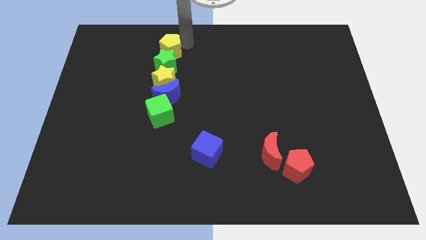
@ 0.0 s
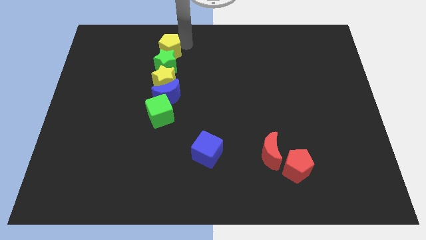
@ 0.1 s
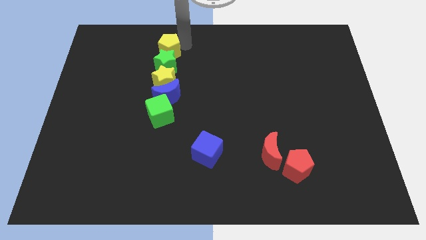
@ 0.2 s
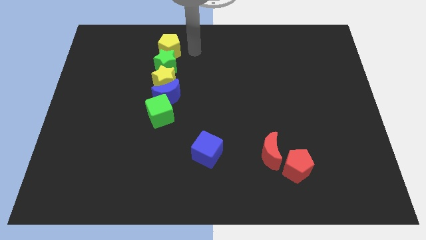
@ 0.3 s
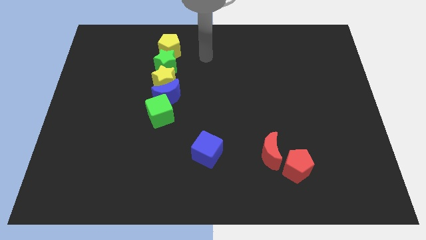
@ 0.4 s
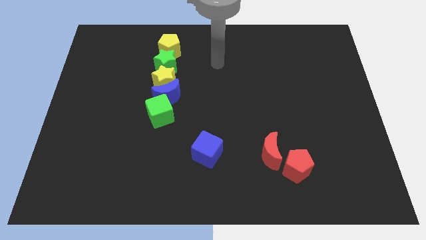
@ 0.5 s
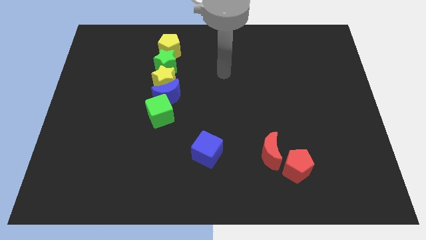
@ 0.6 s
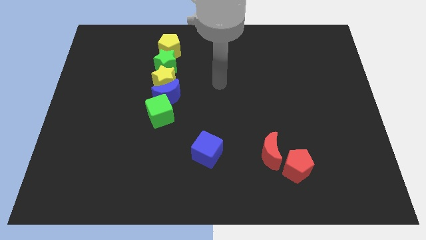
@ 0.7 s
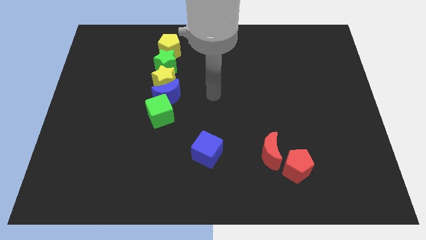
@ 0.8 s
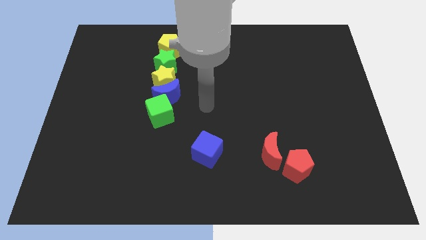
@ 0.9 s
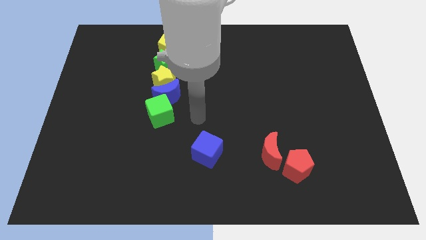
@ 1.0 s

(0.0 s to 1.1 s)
move your arm away from yellow pentagon

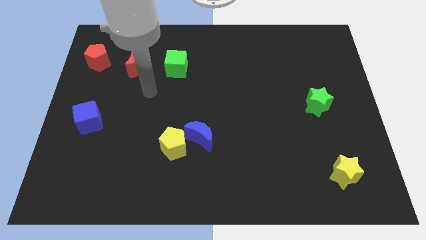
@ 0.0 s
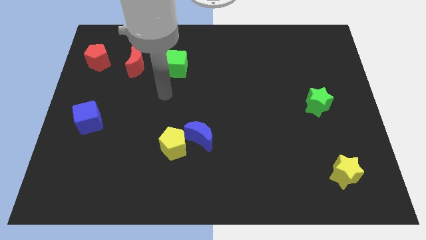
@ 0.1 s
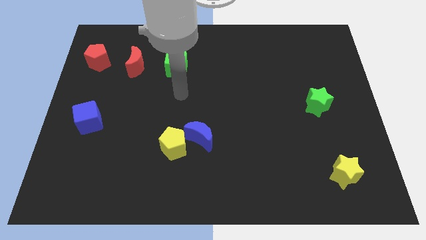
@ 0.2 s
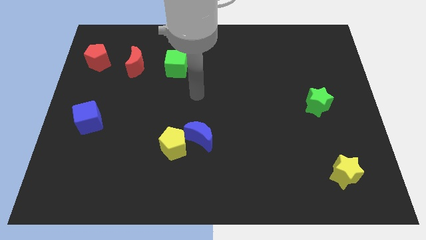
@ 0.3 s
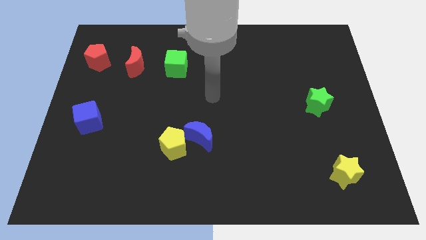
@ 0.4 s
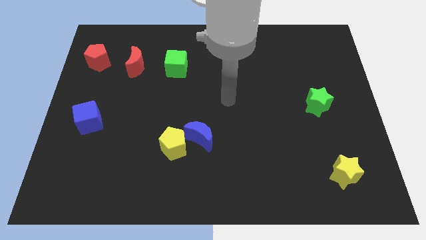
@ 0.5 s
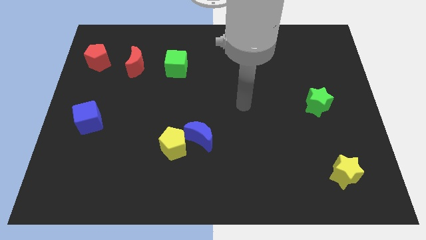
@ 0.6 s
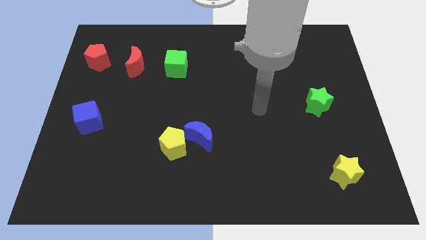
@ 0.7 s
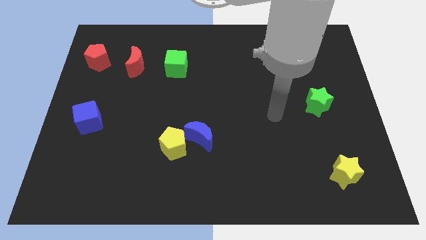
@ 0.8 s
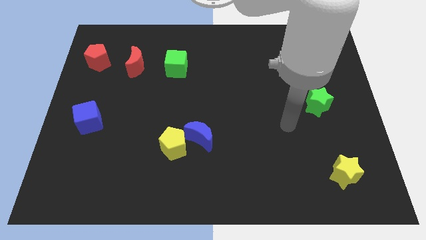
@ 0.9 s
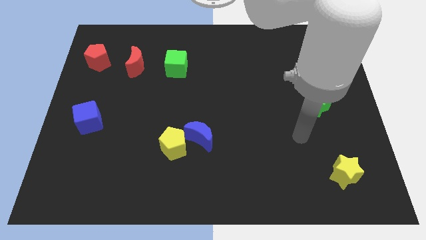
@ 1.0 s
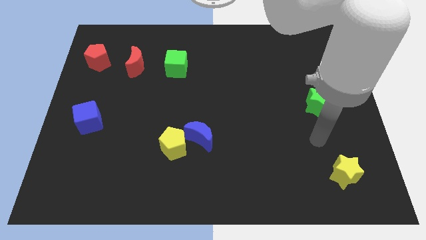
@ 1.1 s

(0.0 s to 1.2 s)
move the arm away from the red crescent

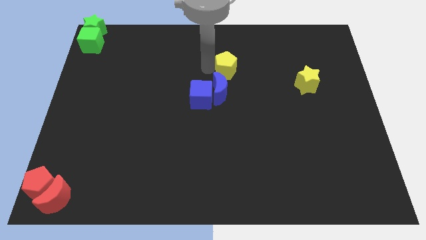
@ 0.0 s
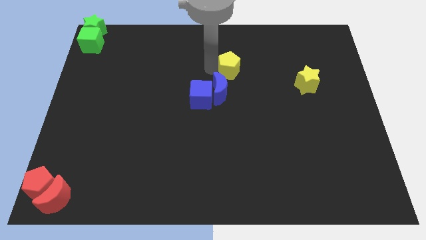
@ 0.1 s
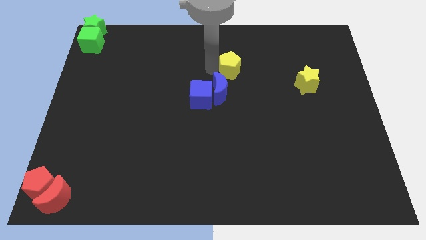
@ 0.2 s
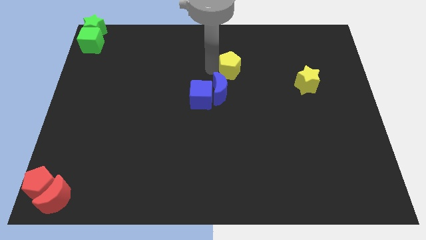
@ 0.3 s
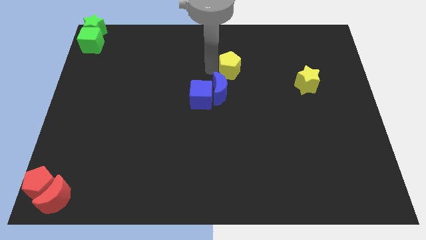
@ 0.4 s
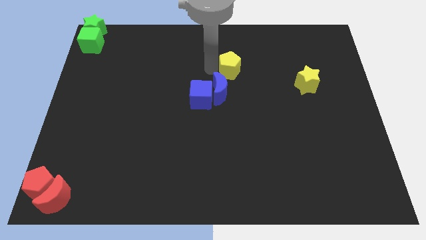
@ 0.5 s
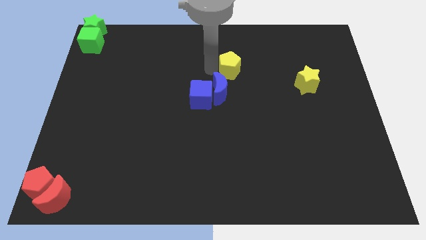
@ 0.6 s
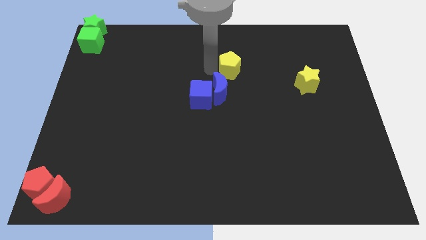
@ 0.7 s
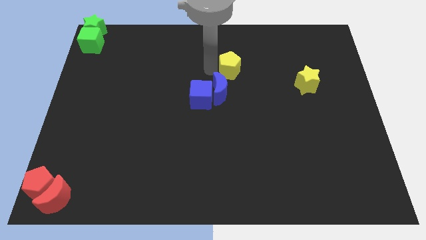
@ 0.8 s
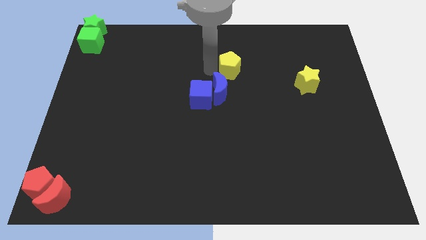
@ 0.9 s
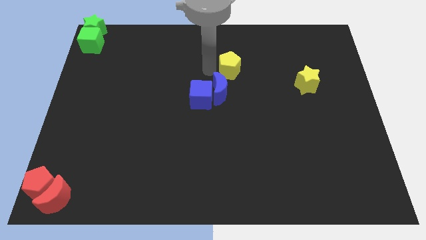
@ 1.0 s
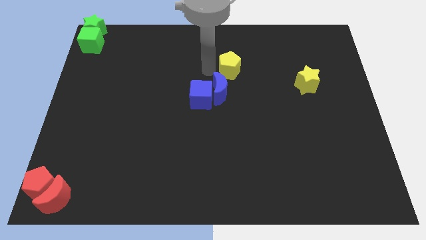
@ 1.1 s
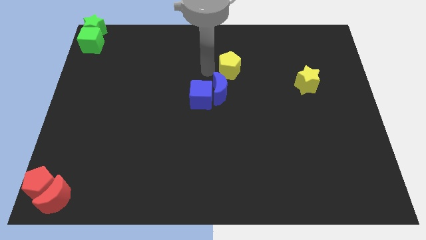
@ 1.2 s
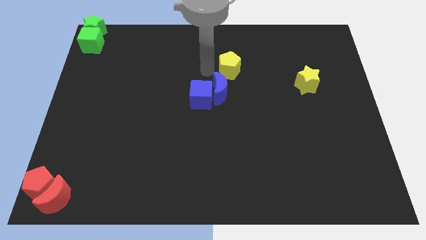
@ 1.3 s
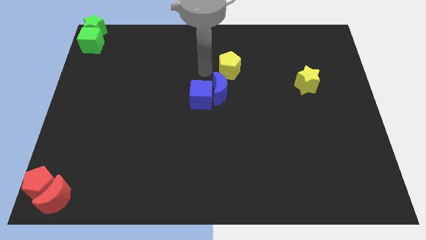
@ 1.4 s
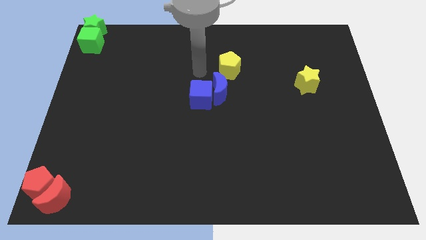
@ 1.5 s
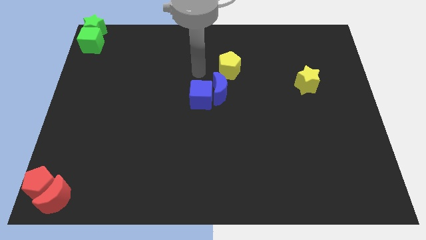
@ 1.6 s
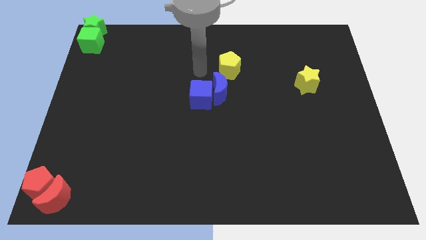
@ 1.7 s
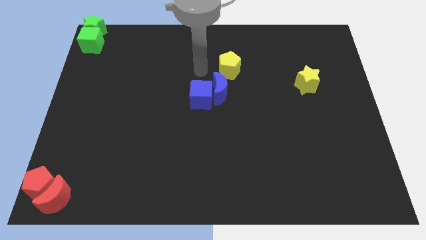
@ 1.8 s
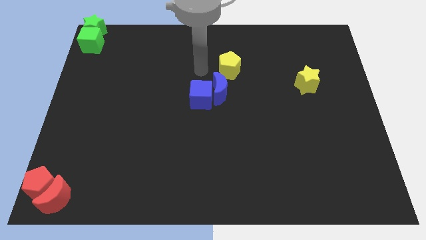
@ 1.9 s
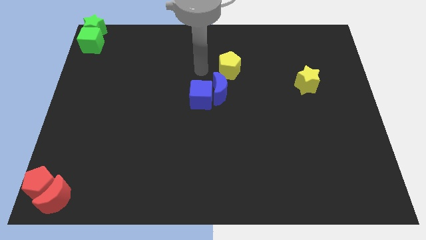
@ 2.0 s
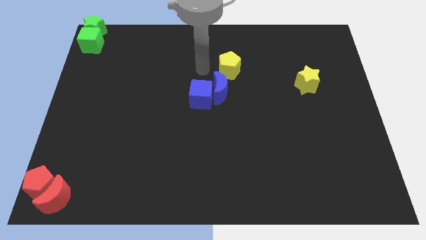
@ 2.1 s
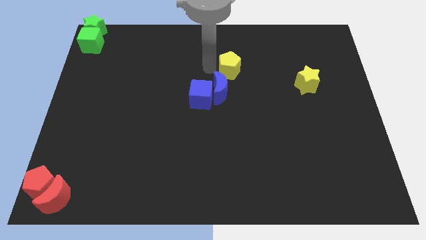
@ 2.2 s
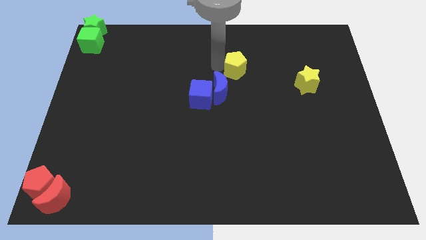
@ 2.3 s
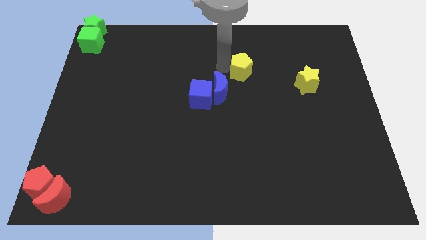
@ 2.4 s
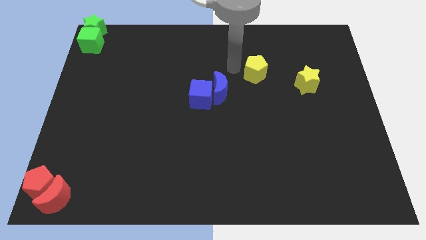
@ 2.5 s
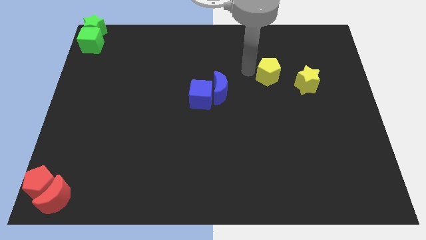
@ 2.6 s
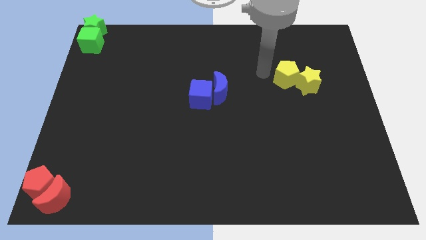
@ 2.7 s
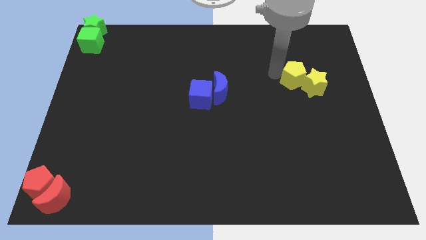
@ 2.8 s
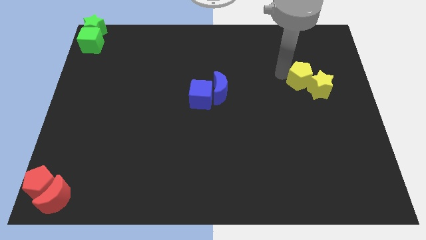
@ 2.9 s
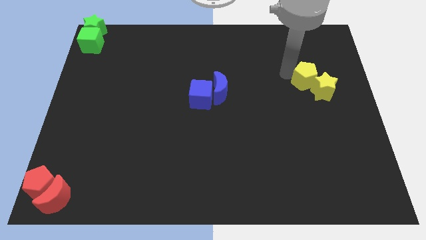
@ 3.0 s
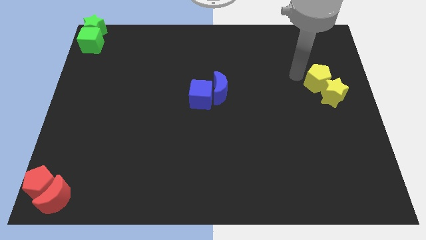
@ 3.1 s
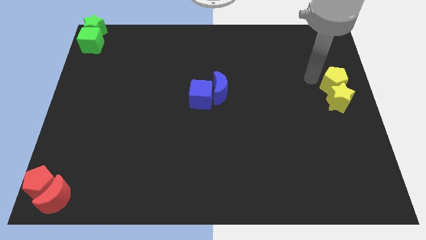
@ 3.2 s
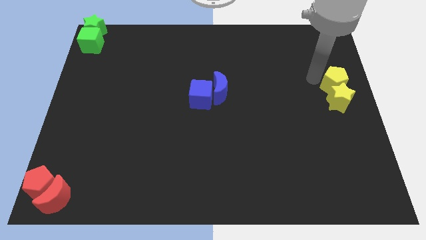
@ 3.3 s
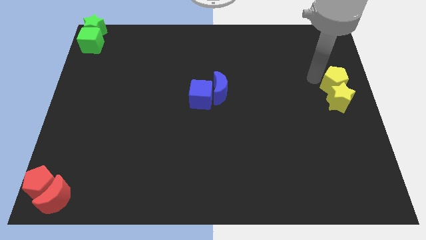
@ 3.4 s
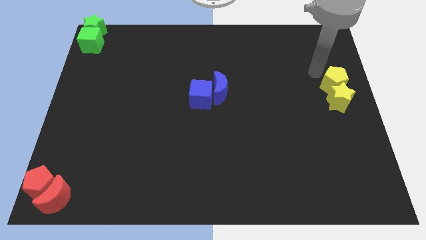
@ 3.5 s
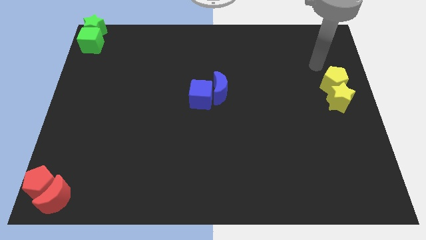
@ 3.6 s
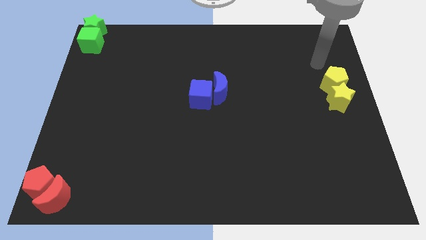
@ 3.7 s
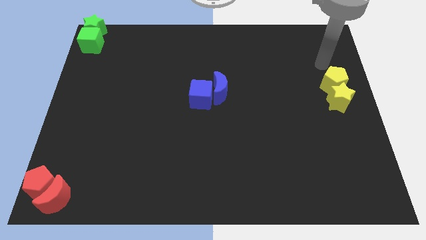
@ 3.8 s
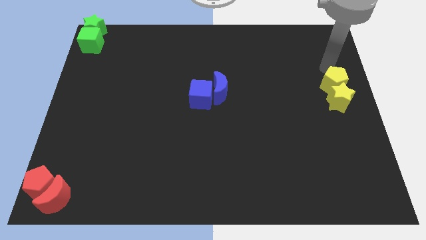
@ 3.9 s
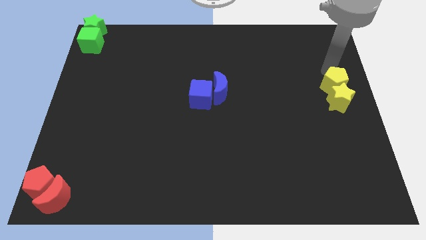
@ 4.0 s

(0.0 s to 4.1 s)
slide the yellow pentagon into the yellow star

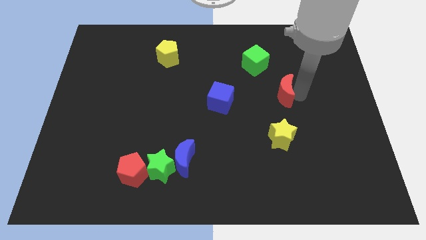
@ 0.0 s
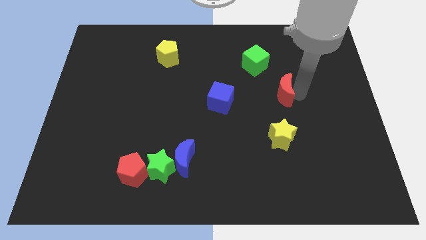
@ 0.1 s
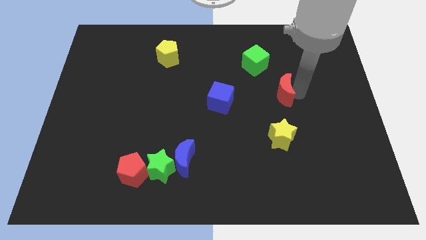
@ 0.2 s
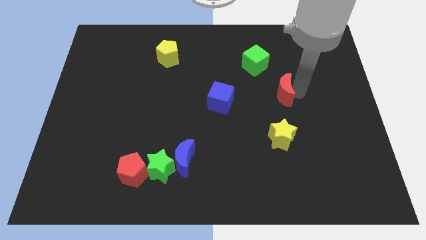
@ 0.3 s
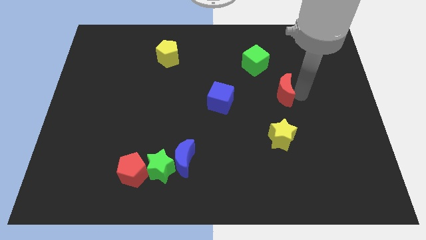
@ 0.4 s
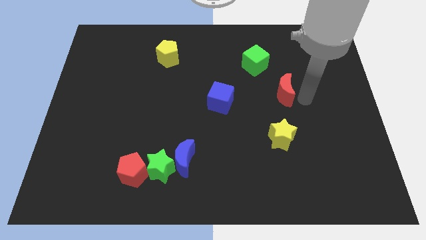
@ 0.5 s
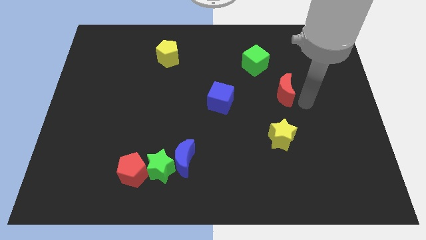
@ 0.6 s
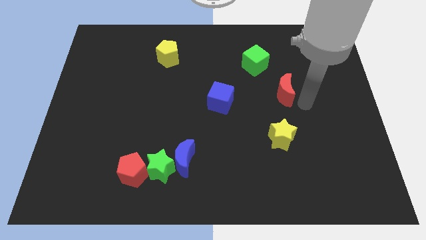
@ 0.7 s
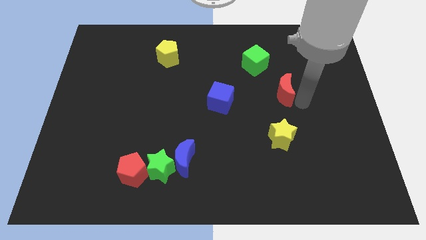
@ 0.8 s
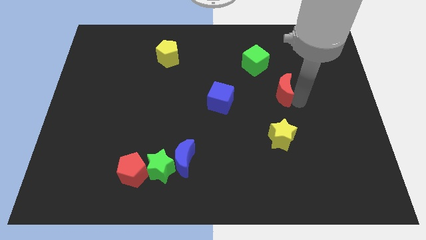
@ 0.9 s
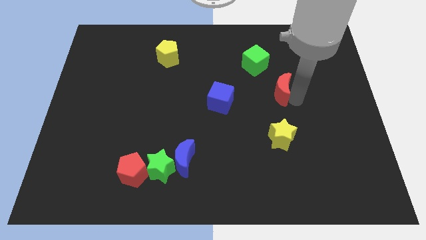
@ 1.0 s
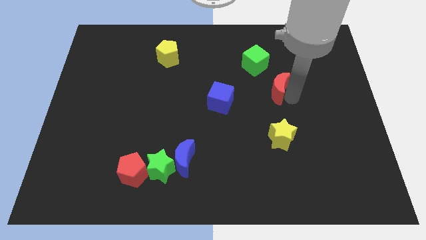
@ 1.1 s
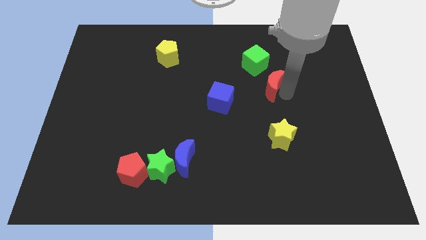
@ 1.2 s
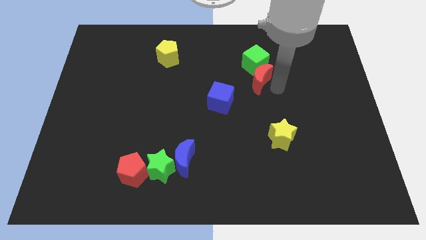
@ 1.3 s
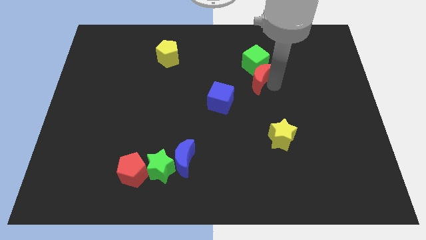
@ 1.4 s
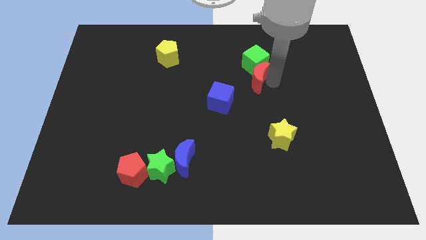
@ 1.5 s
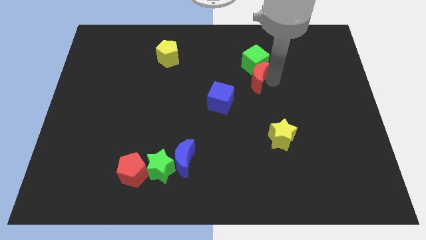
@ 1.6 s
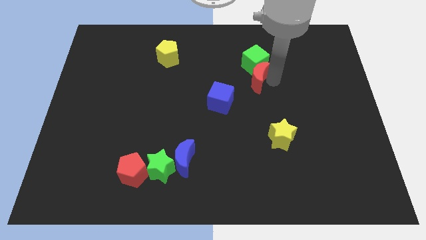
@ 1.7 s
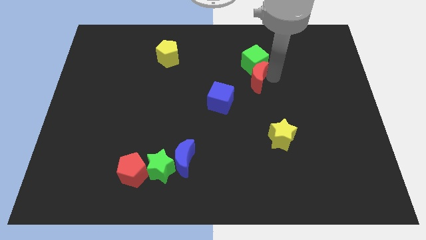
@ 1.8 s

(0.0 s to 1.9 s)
move red moon into green cube

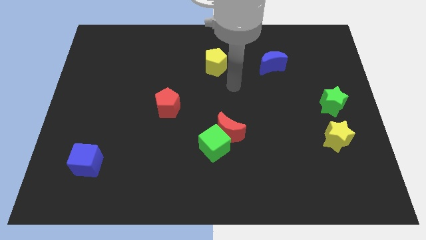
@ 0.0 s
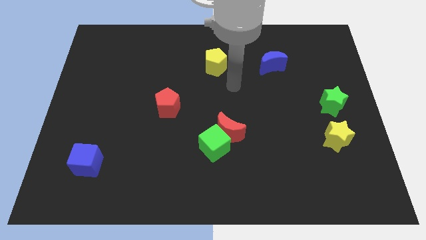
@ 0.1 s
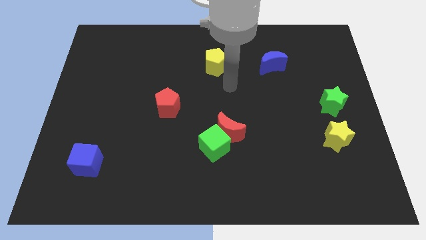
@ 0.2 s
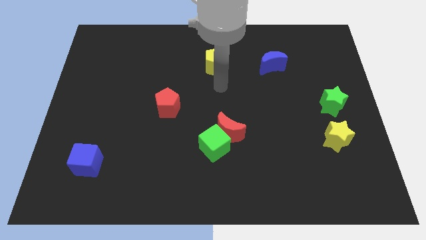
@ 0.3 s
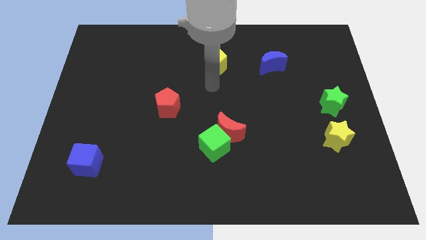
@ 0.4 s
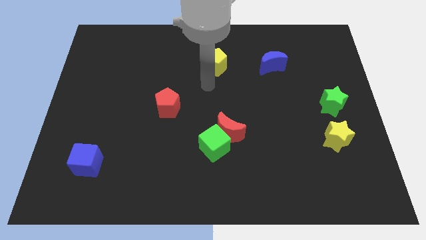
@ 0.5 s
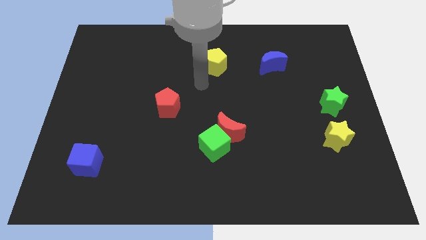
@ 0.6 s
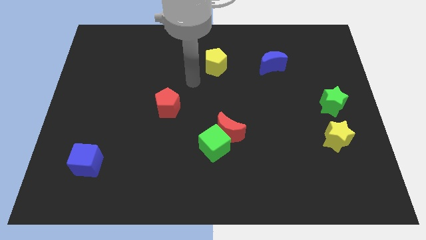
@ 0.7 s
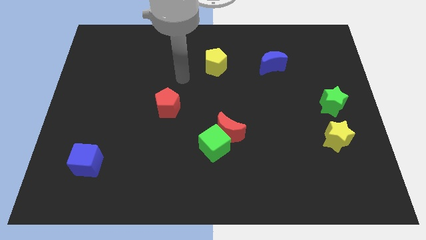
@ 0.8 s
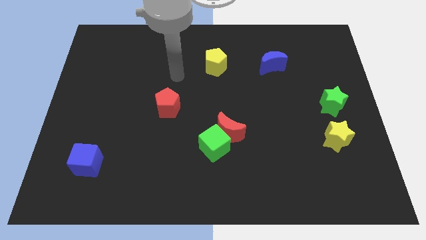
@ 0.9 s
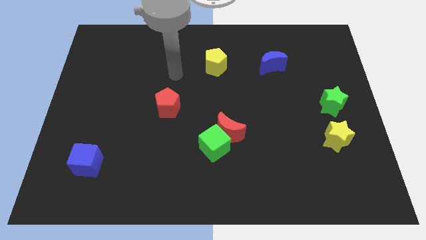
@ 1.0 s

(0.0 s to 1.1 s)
put your hand vertically above the red pentagon
